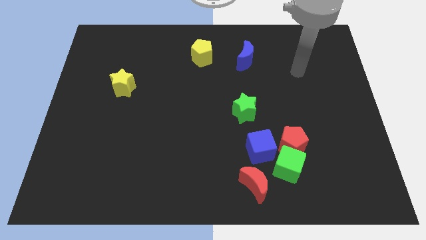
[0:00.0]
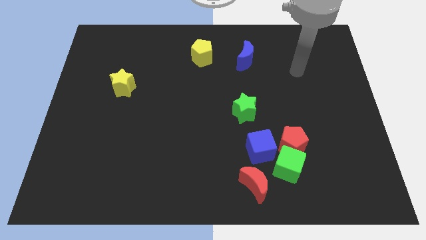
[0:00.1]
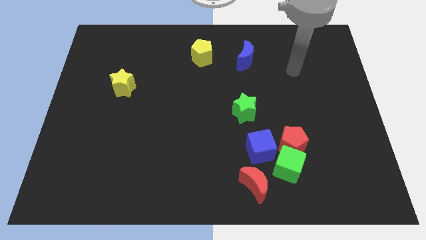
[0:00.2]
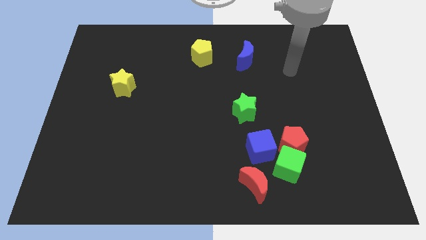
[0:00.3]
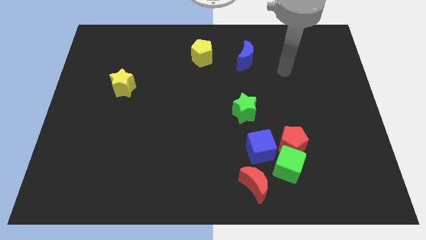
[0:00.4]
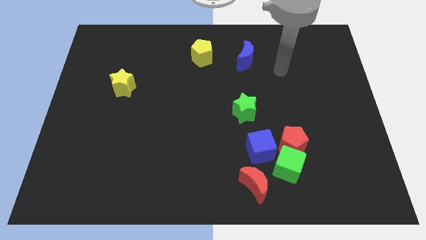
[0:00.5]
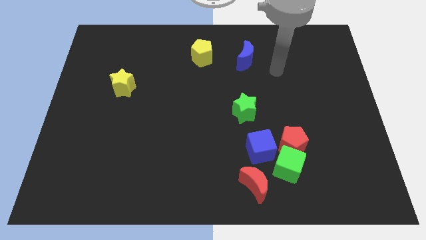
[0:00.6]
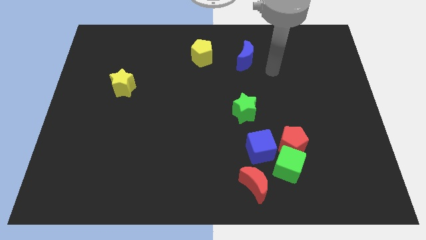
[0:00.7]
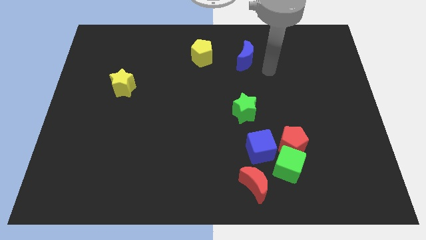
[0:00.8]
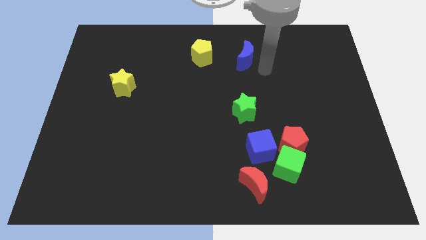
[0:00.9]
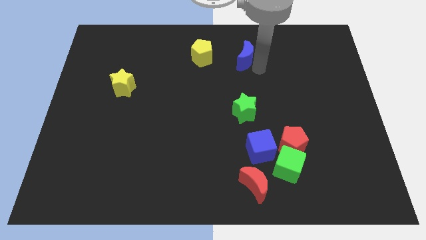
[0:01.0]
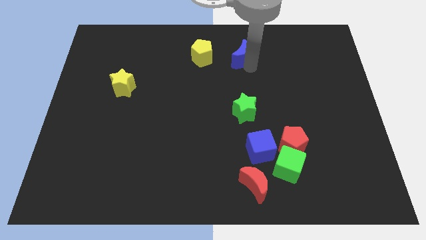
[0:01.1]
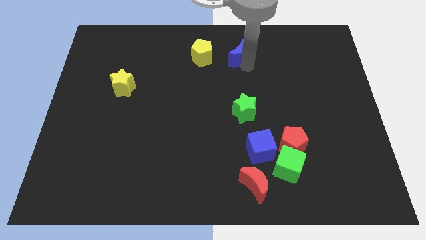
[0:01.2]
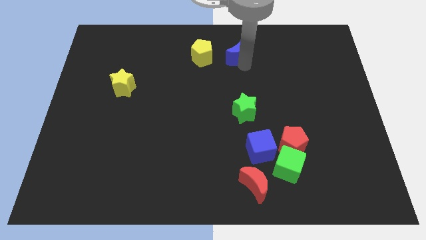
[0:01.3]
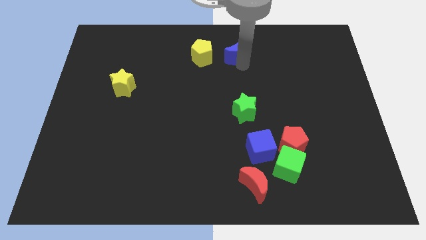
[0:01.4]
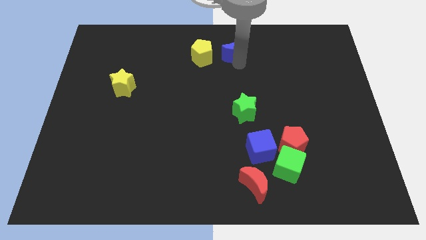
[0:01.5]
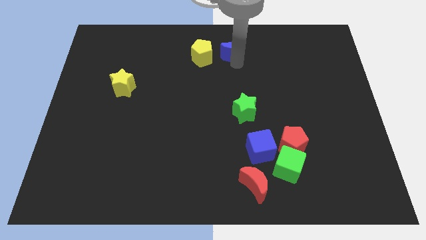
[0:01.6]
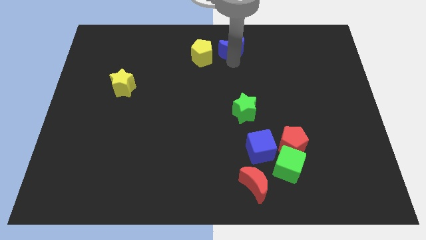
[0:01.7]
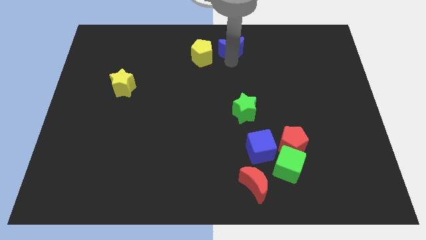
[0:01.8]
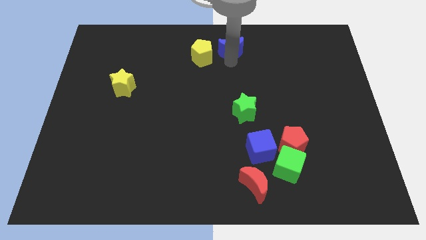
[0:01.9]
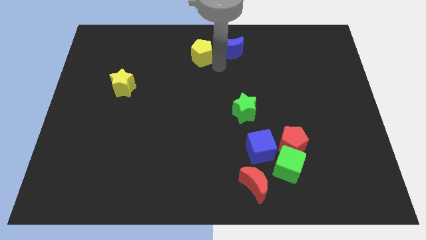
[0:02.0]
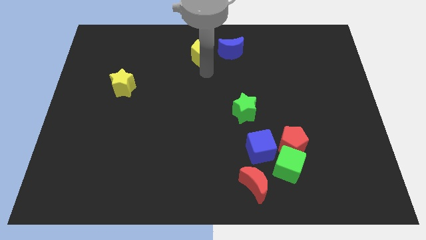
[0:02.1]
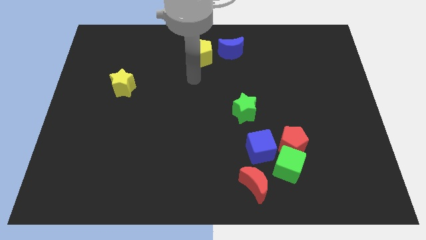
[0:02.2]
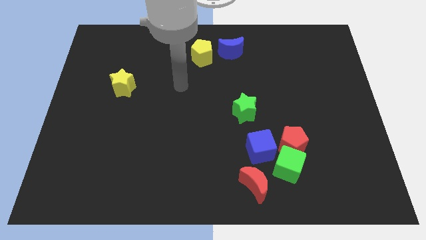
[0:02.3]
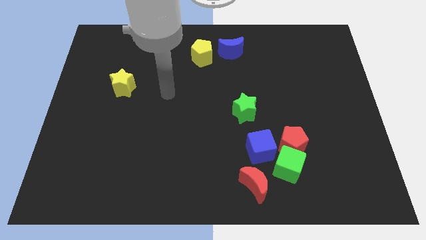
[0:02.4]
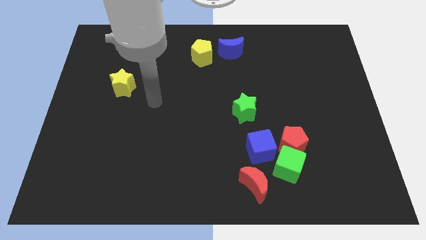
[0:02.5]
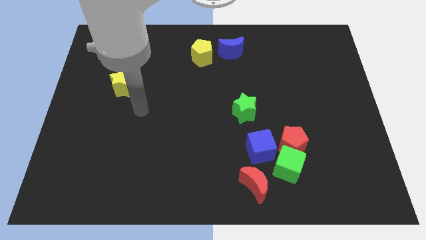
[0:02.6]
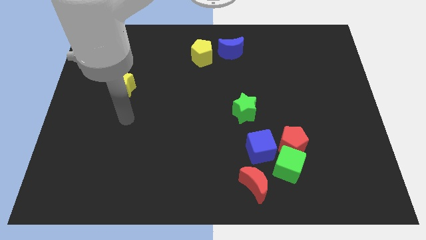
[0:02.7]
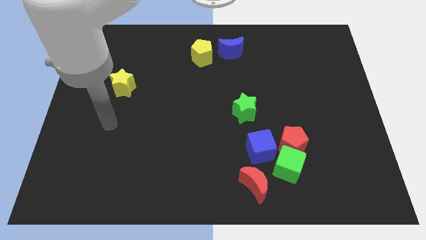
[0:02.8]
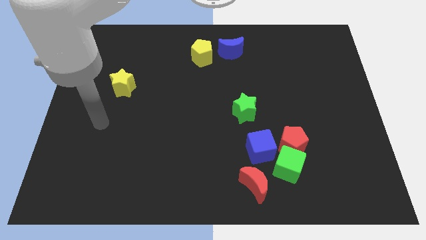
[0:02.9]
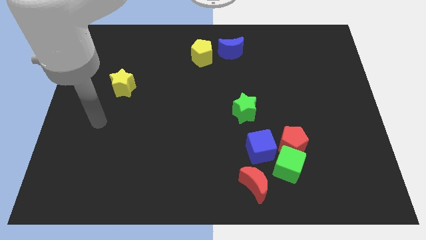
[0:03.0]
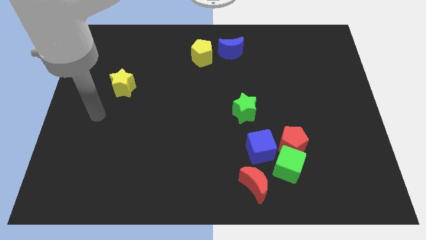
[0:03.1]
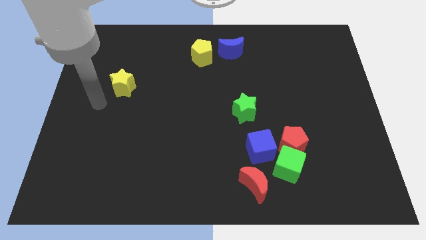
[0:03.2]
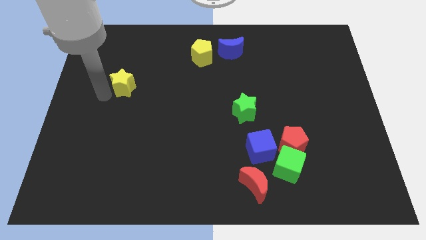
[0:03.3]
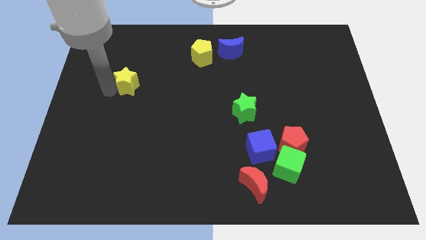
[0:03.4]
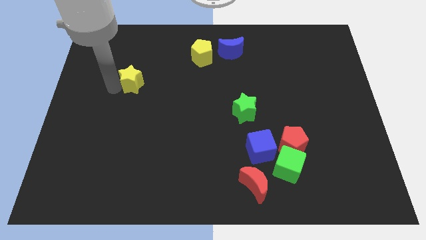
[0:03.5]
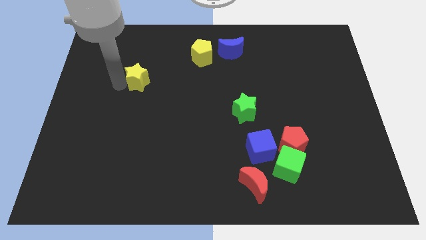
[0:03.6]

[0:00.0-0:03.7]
place the yellow star diagonally to yellow pentagon

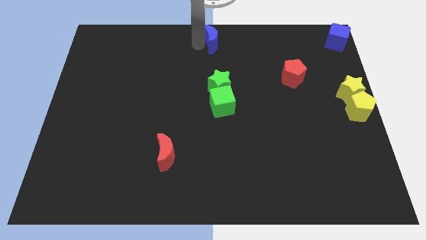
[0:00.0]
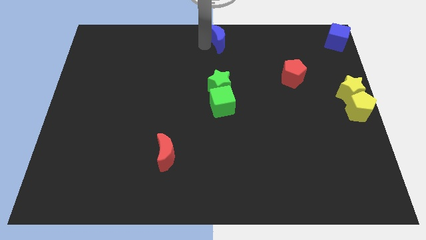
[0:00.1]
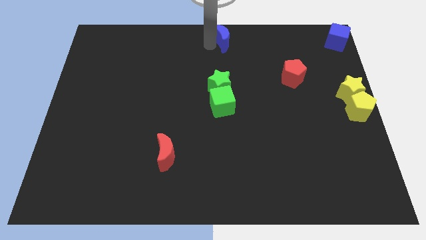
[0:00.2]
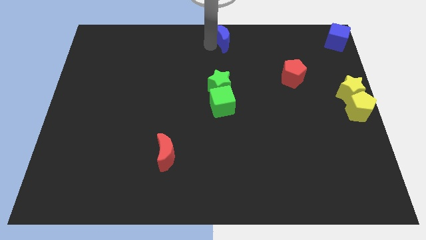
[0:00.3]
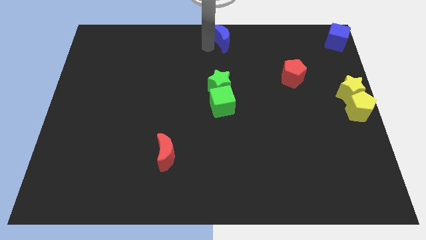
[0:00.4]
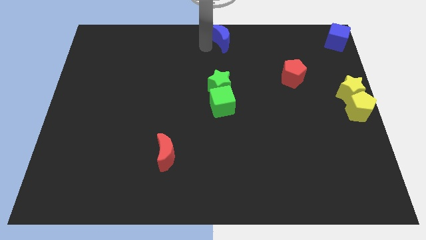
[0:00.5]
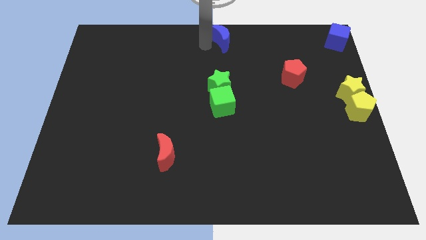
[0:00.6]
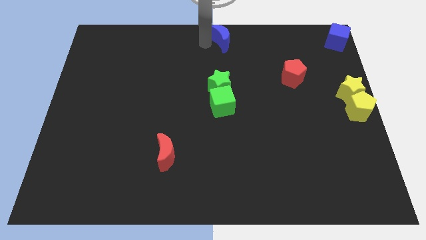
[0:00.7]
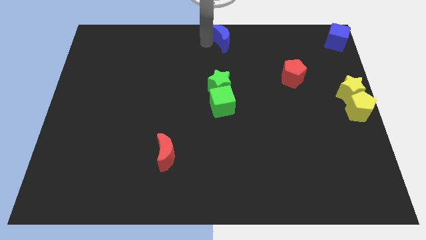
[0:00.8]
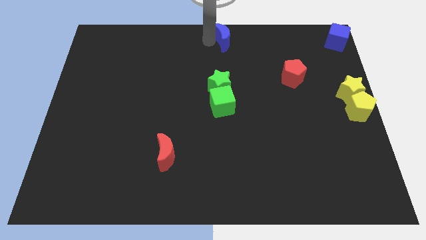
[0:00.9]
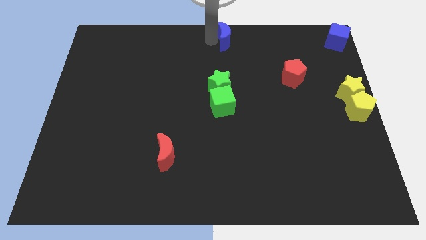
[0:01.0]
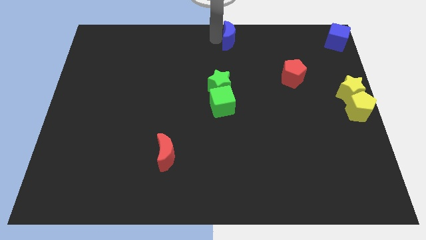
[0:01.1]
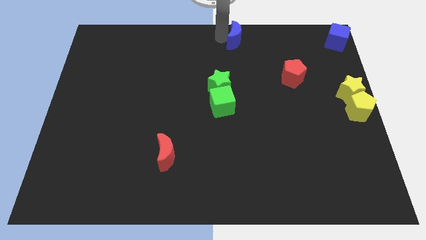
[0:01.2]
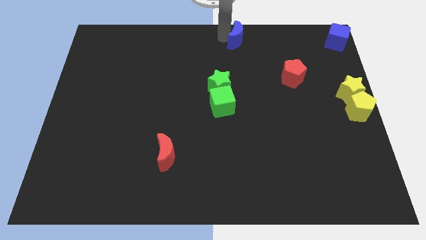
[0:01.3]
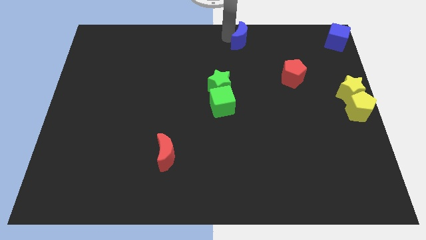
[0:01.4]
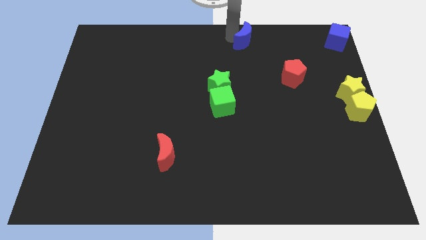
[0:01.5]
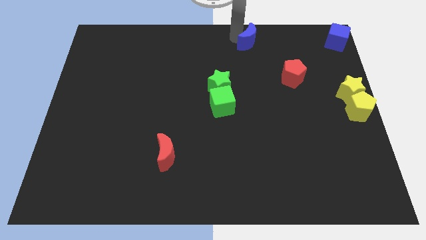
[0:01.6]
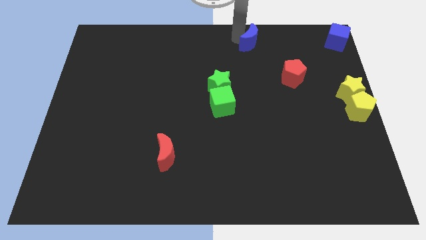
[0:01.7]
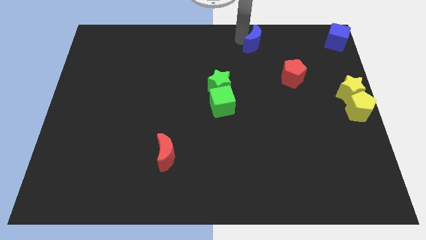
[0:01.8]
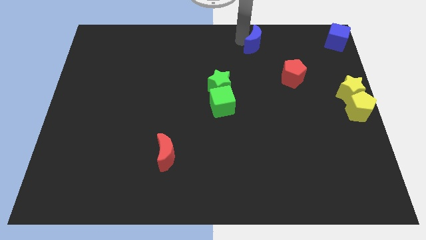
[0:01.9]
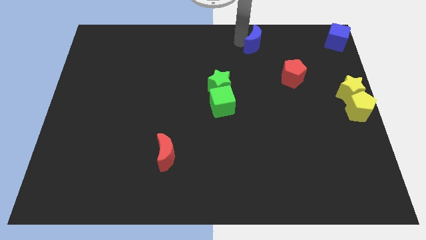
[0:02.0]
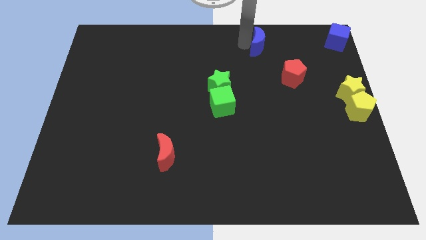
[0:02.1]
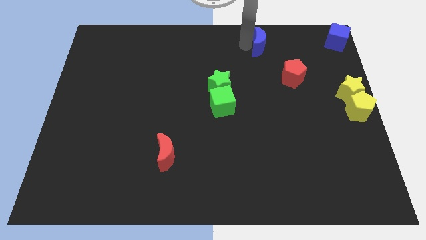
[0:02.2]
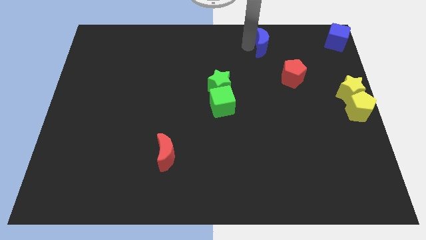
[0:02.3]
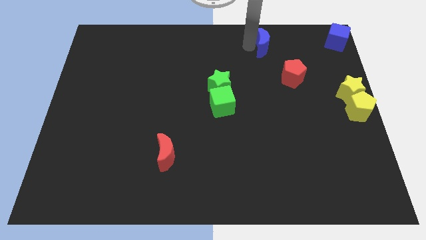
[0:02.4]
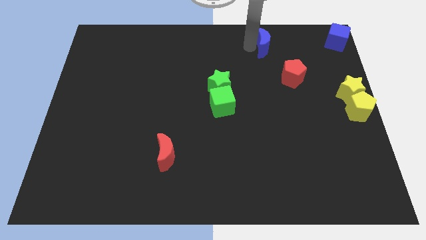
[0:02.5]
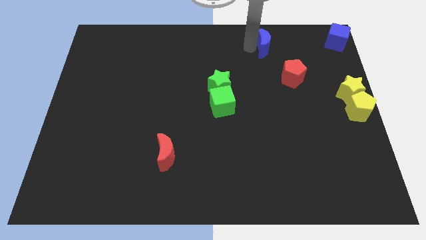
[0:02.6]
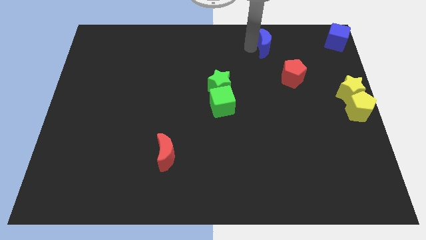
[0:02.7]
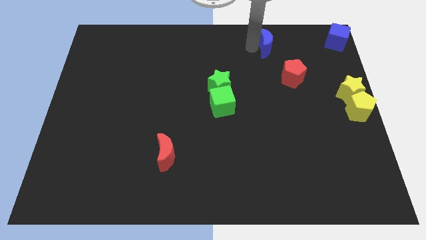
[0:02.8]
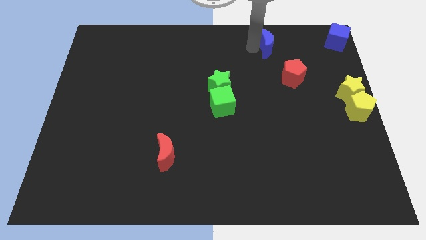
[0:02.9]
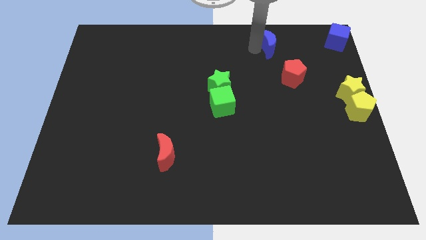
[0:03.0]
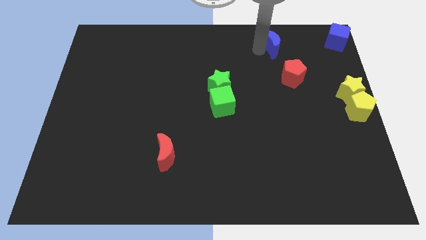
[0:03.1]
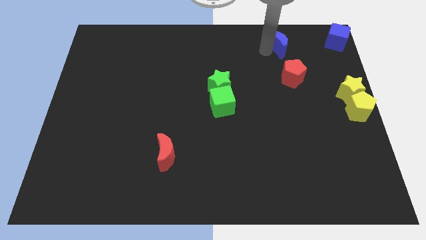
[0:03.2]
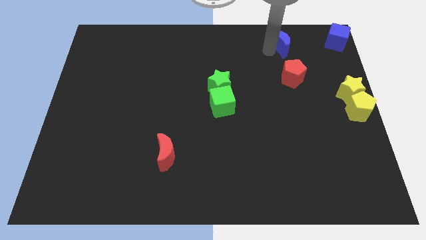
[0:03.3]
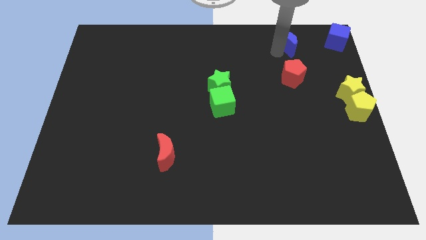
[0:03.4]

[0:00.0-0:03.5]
place the blue crescent vertically towards the red pentagon

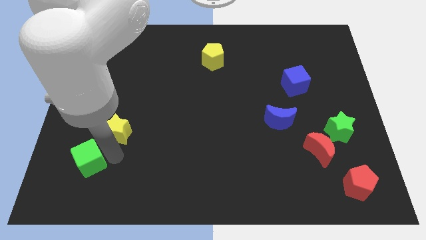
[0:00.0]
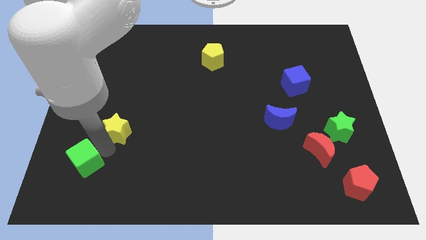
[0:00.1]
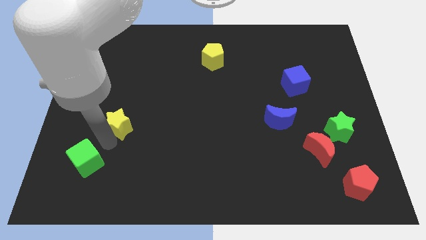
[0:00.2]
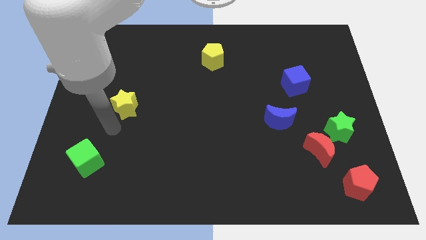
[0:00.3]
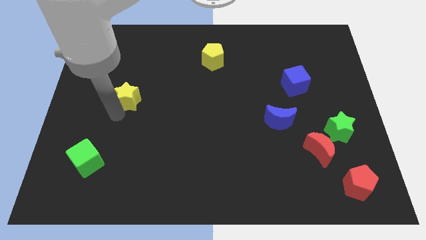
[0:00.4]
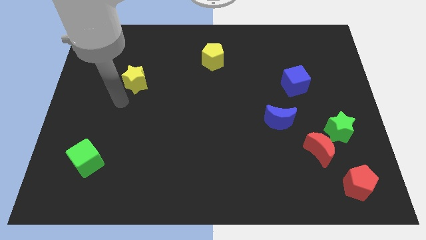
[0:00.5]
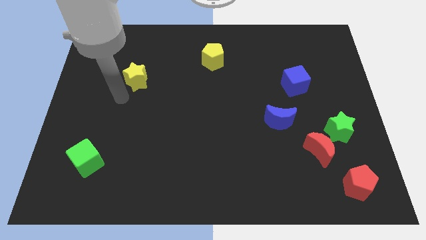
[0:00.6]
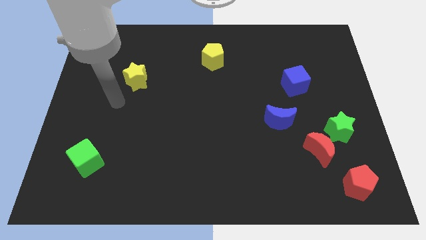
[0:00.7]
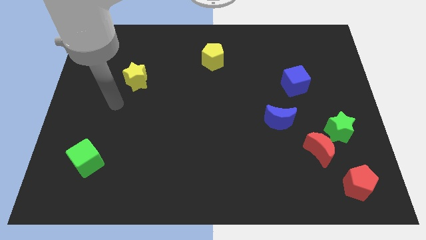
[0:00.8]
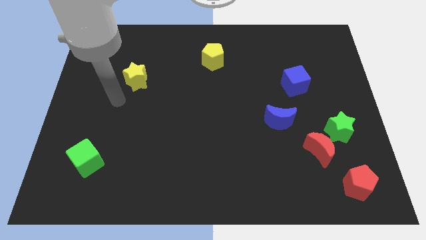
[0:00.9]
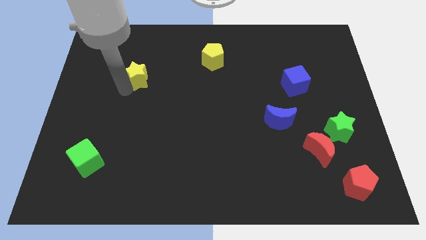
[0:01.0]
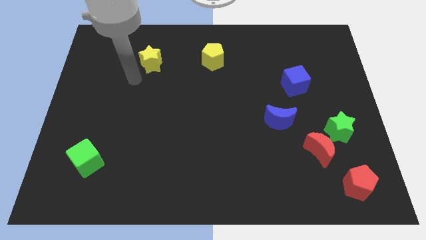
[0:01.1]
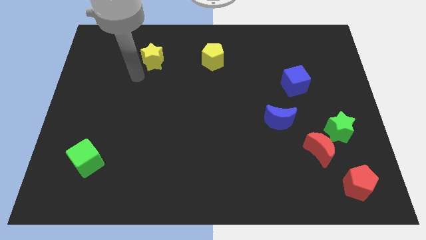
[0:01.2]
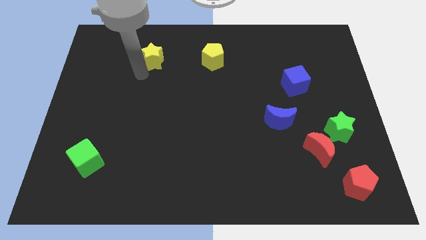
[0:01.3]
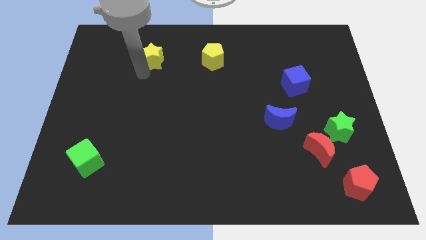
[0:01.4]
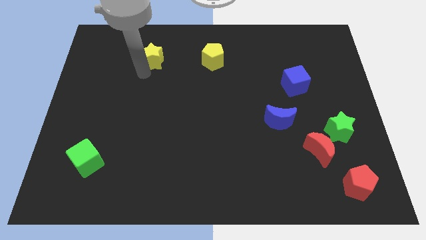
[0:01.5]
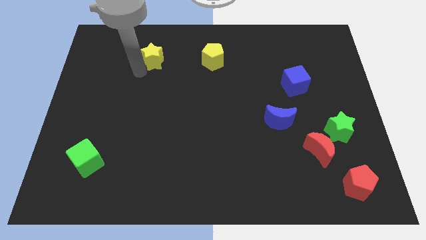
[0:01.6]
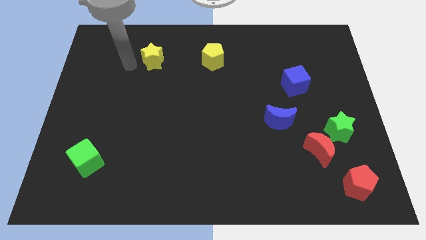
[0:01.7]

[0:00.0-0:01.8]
place the yellow star left to the yellow pentagon
